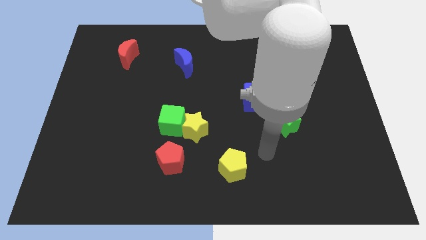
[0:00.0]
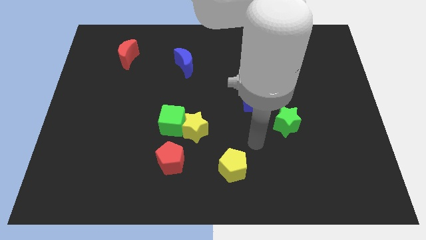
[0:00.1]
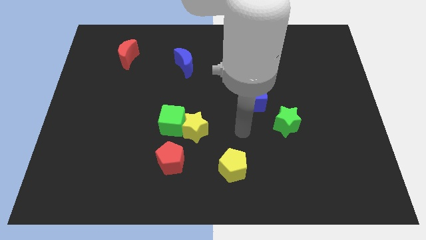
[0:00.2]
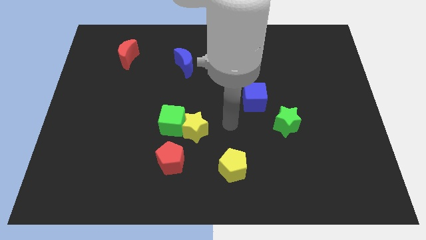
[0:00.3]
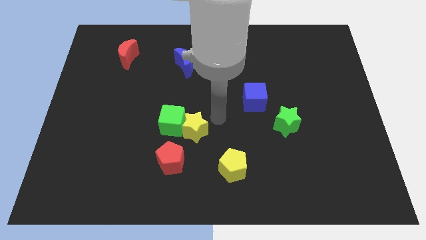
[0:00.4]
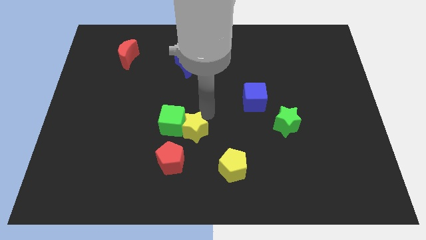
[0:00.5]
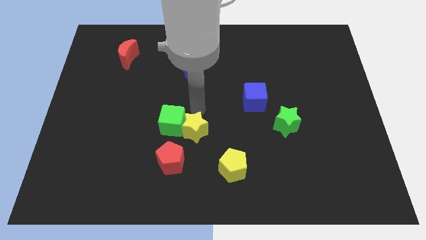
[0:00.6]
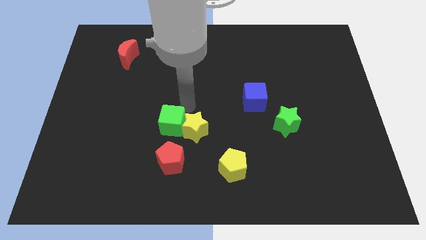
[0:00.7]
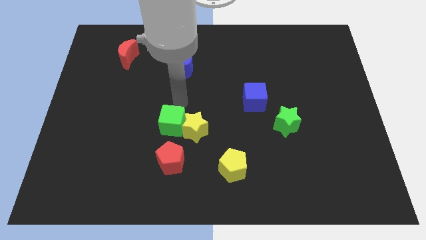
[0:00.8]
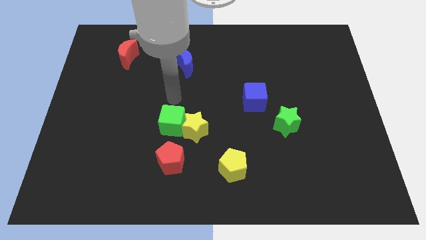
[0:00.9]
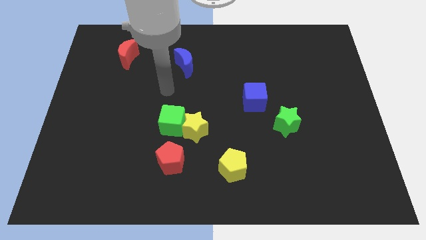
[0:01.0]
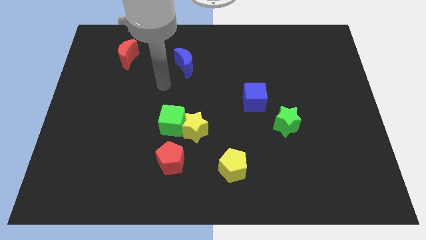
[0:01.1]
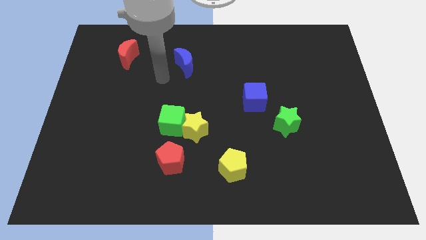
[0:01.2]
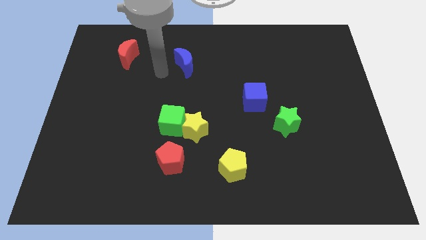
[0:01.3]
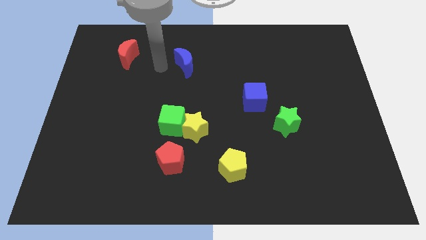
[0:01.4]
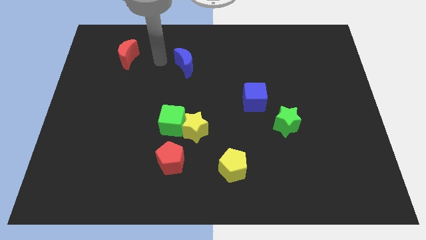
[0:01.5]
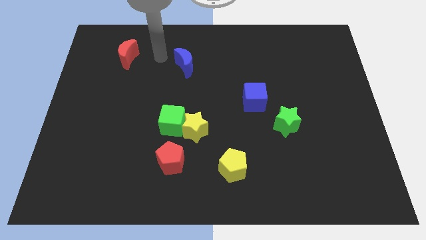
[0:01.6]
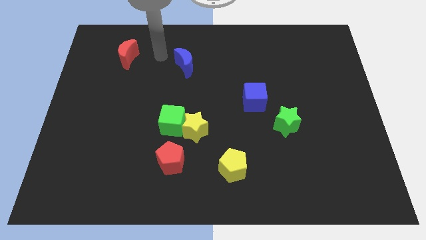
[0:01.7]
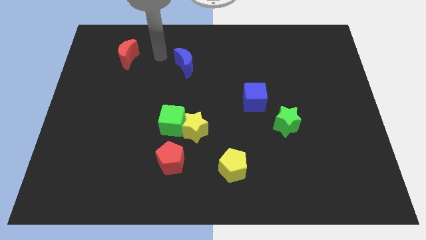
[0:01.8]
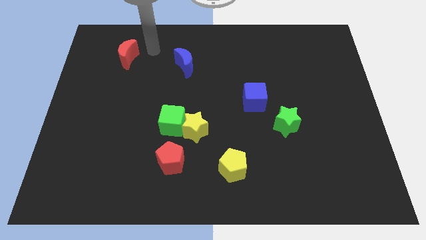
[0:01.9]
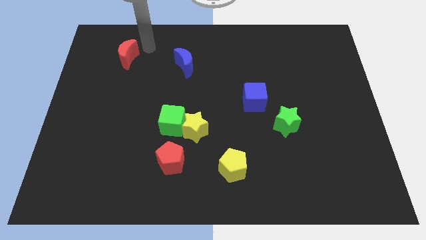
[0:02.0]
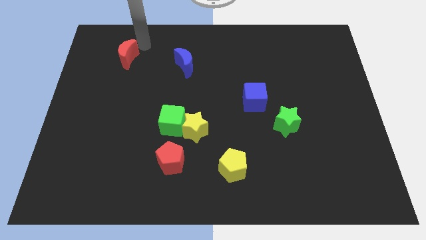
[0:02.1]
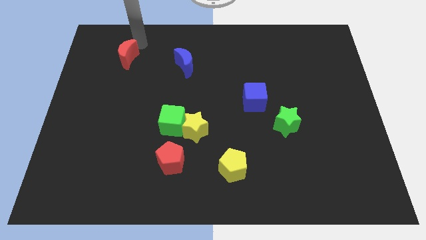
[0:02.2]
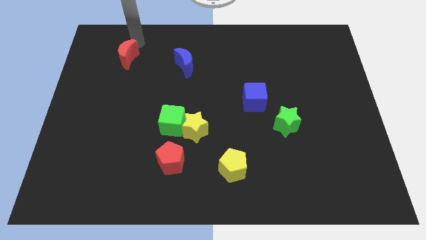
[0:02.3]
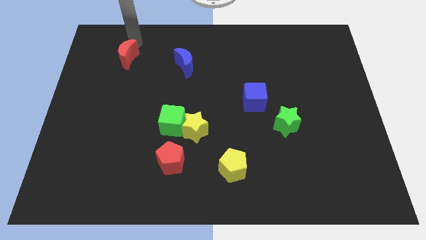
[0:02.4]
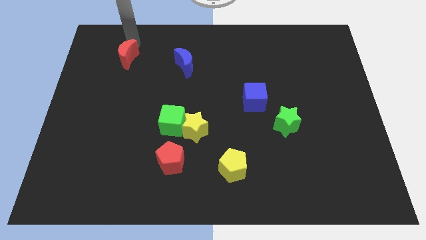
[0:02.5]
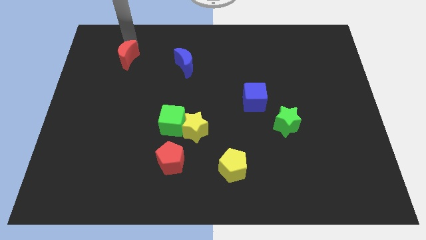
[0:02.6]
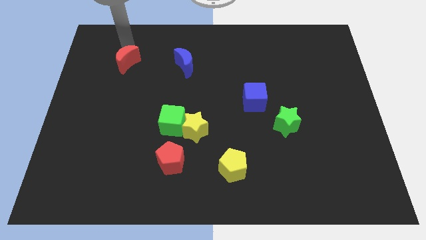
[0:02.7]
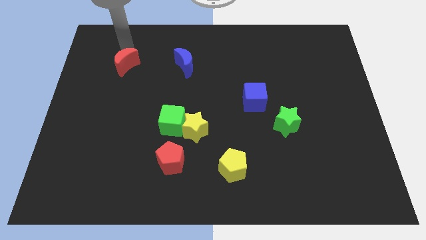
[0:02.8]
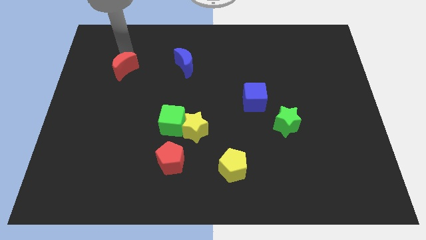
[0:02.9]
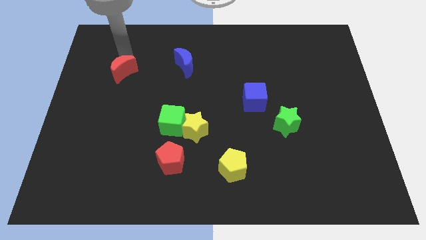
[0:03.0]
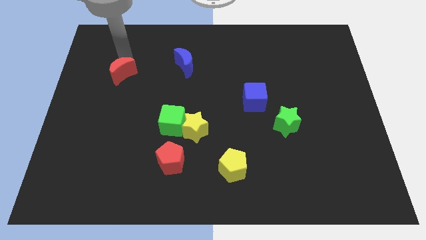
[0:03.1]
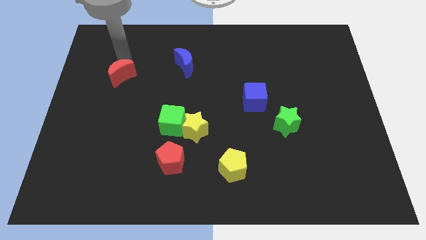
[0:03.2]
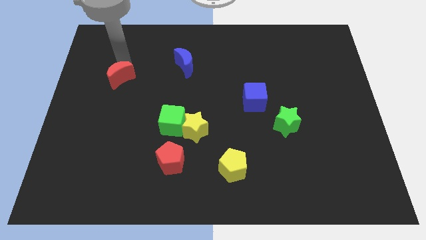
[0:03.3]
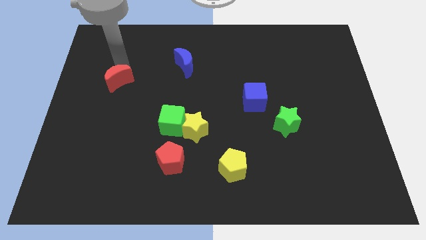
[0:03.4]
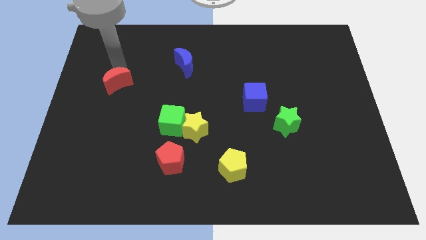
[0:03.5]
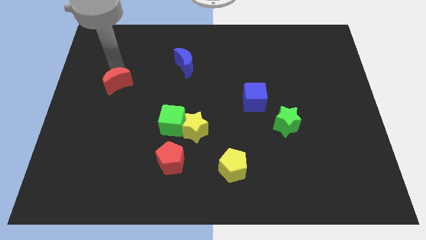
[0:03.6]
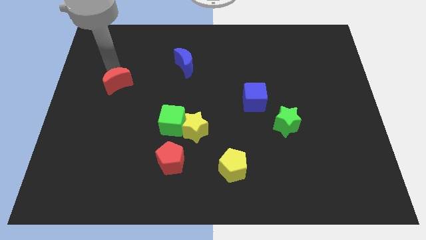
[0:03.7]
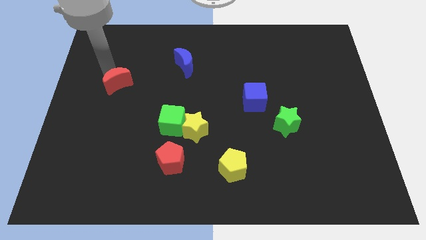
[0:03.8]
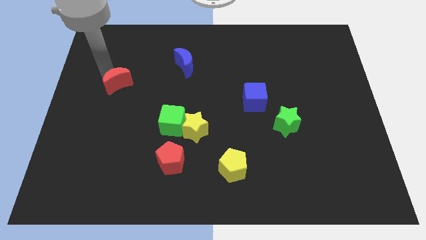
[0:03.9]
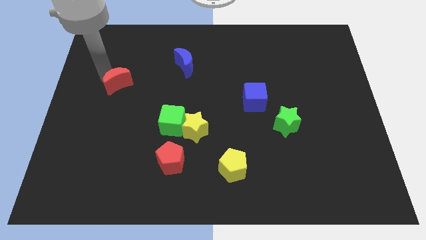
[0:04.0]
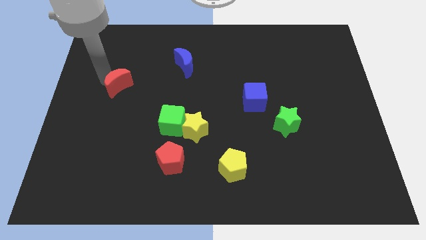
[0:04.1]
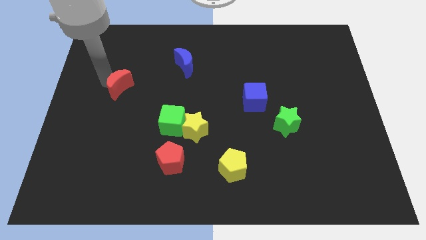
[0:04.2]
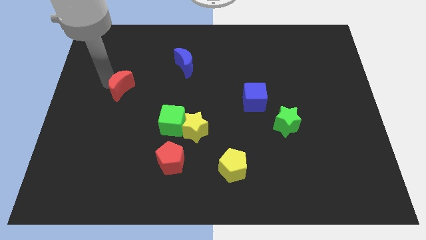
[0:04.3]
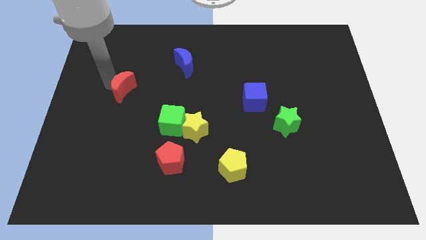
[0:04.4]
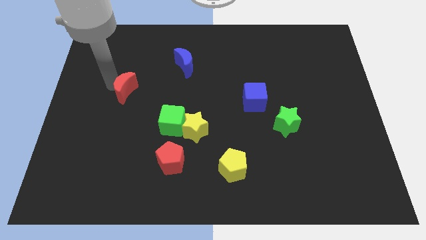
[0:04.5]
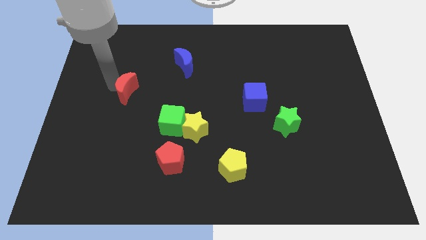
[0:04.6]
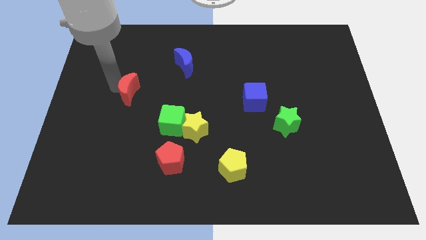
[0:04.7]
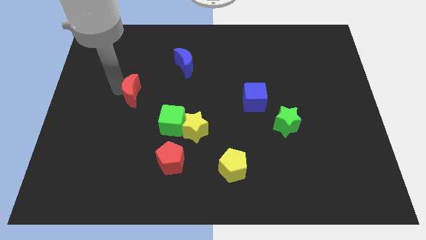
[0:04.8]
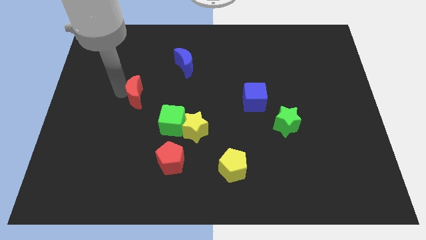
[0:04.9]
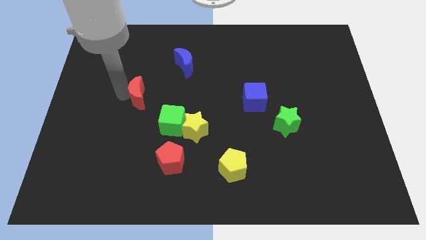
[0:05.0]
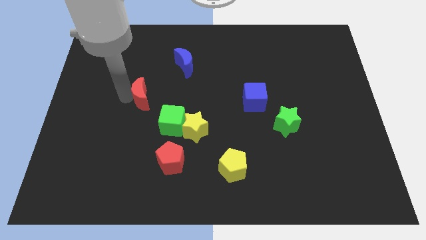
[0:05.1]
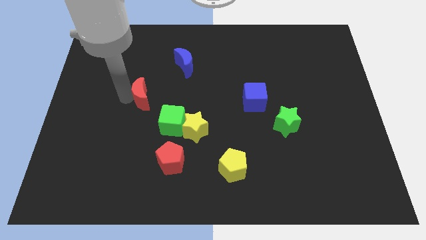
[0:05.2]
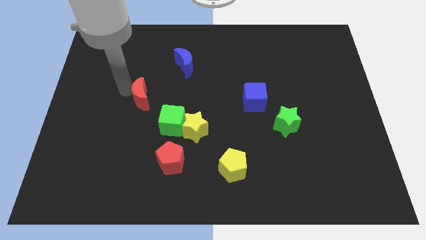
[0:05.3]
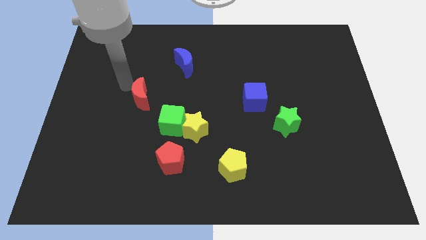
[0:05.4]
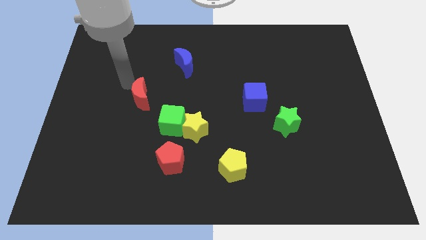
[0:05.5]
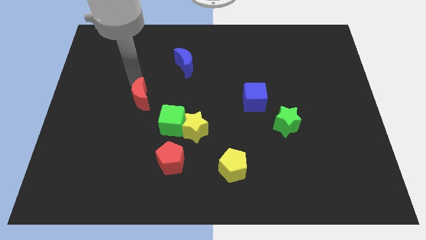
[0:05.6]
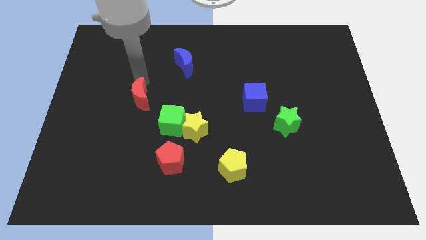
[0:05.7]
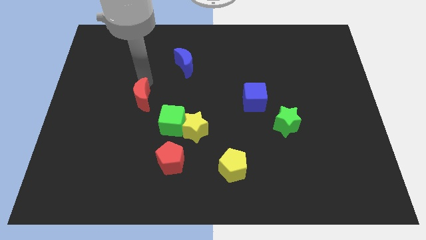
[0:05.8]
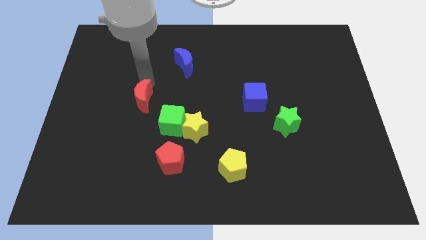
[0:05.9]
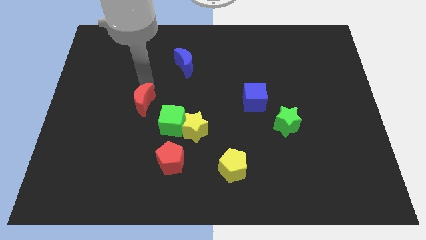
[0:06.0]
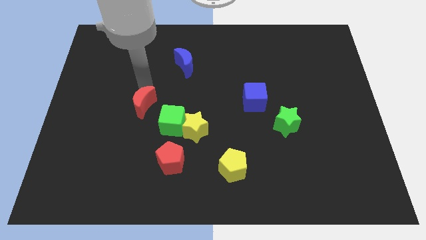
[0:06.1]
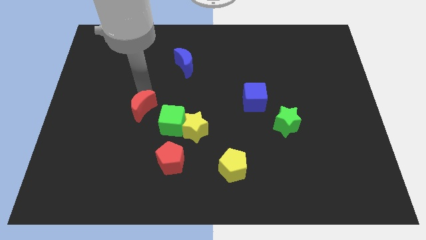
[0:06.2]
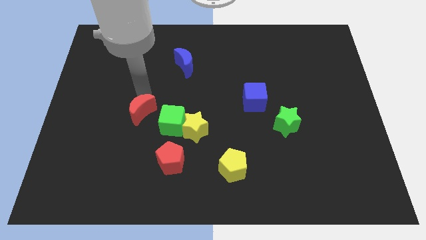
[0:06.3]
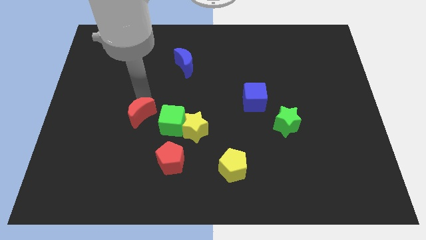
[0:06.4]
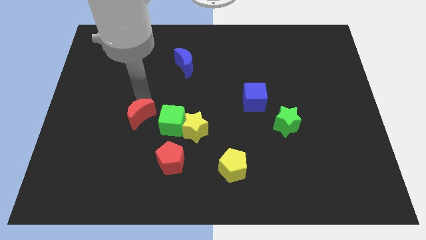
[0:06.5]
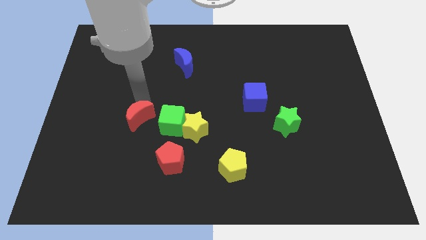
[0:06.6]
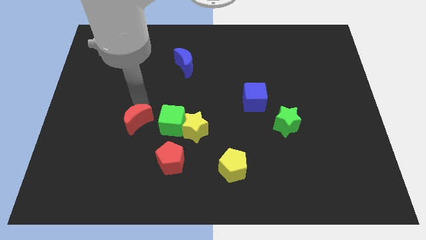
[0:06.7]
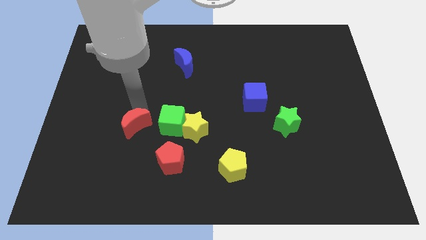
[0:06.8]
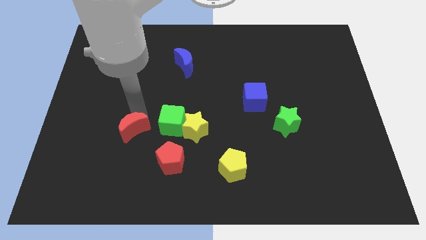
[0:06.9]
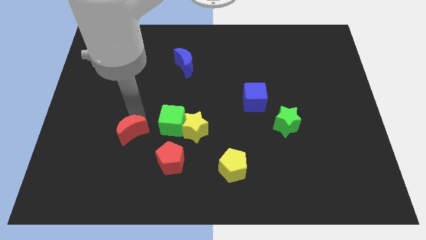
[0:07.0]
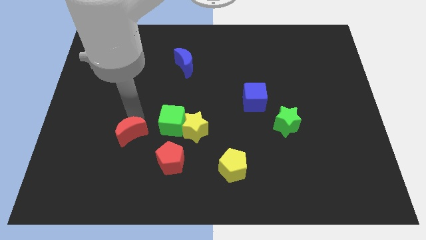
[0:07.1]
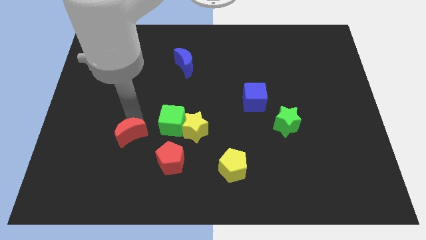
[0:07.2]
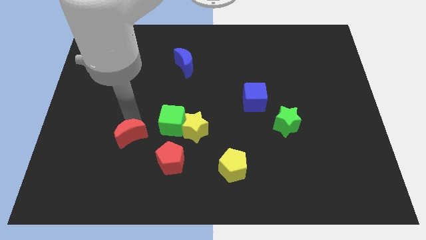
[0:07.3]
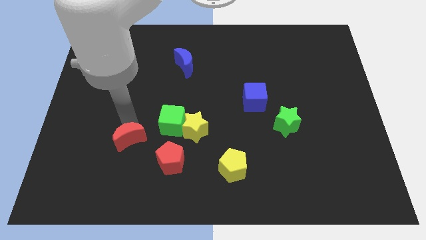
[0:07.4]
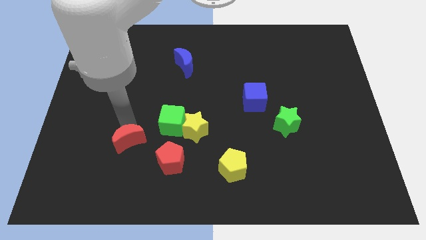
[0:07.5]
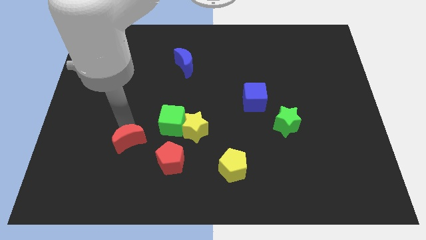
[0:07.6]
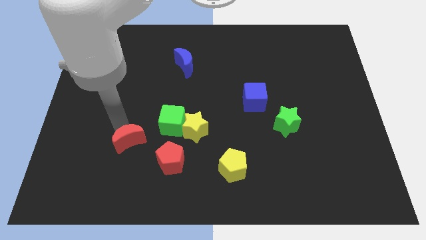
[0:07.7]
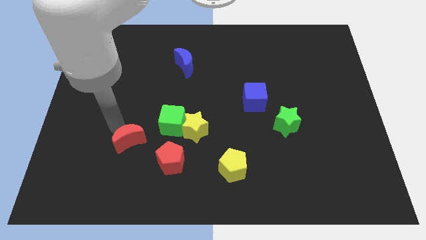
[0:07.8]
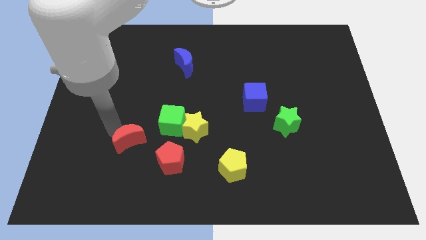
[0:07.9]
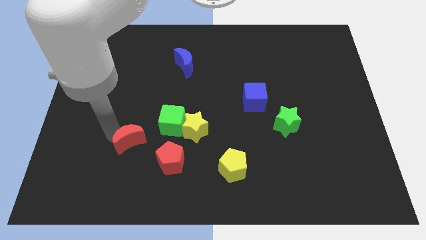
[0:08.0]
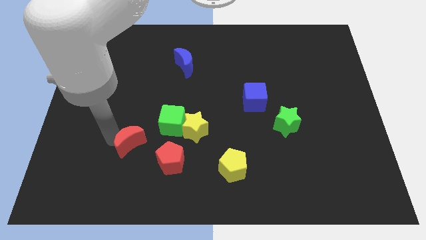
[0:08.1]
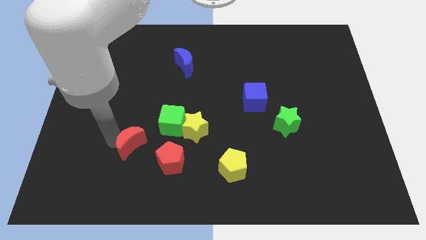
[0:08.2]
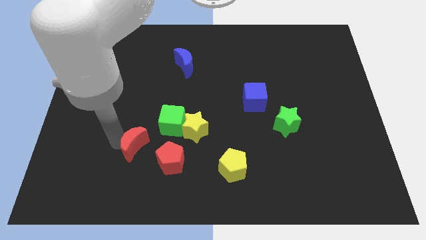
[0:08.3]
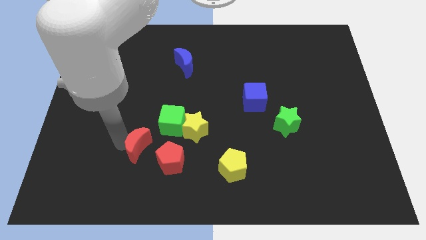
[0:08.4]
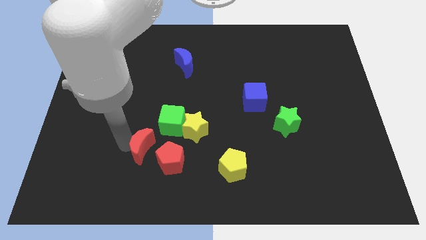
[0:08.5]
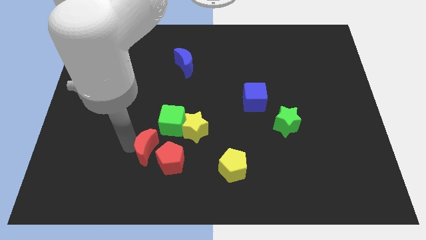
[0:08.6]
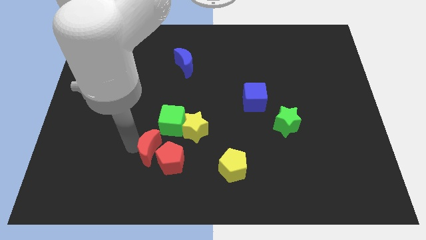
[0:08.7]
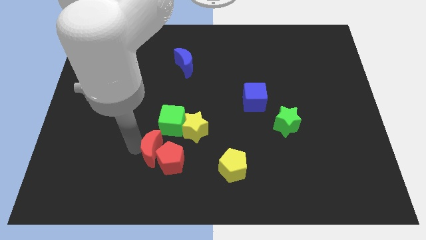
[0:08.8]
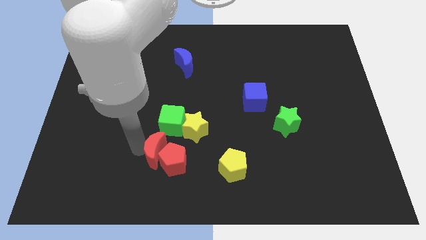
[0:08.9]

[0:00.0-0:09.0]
slide the red moon next to the red pentagon
